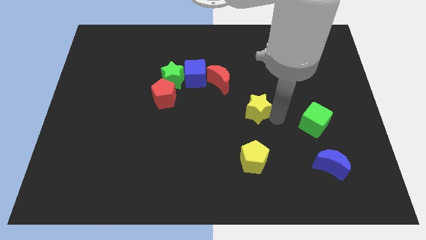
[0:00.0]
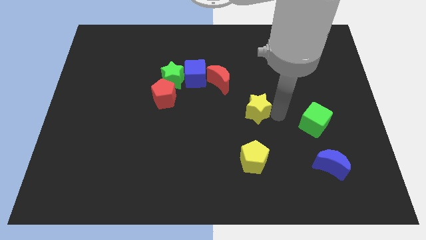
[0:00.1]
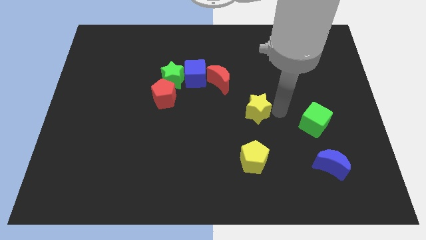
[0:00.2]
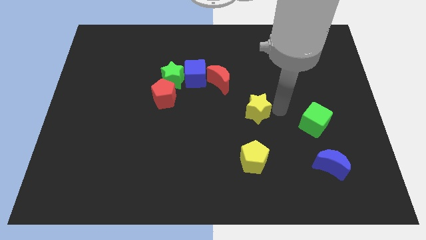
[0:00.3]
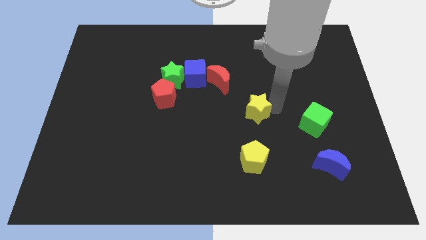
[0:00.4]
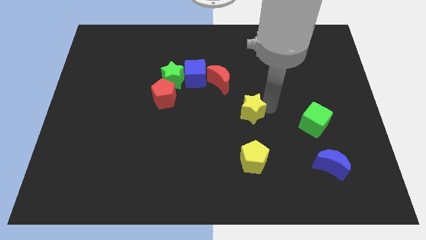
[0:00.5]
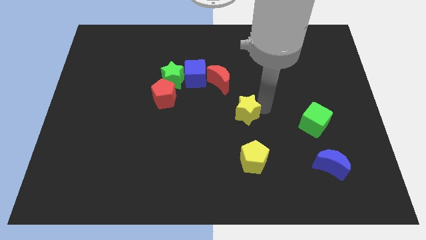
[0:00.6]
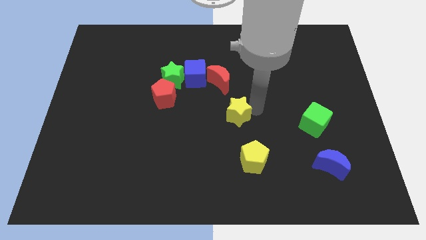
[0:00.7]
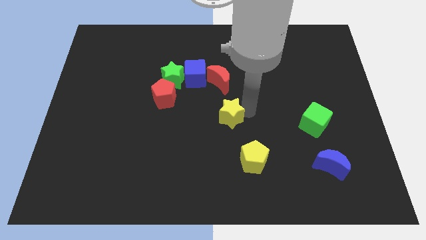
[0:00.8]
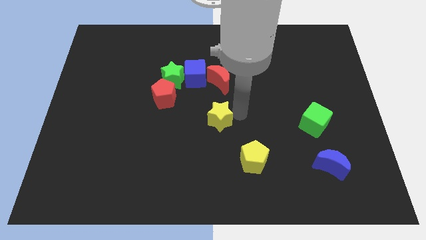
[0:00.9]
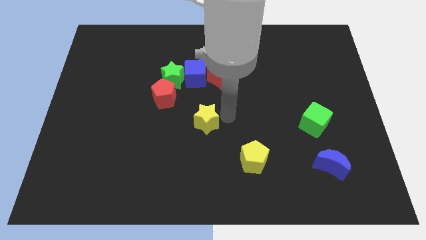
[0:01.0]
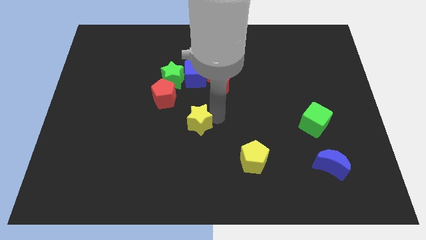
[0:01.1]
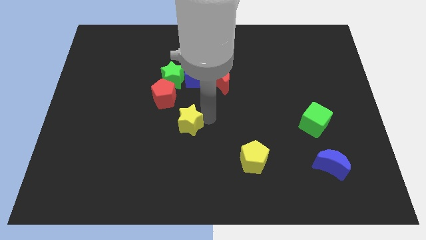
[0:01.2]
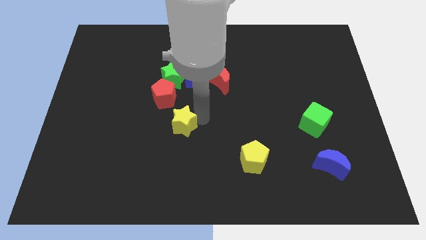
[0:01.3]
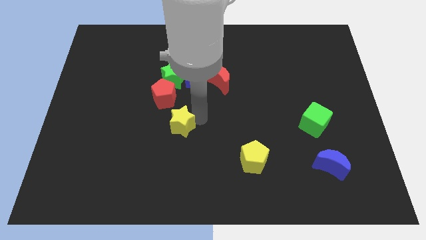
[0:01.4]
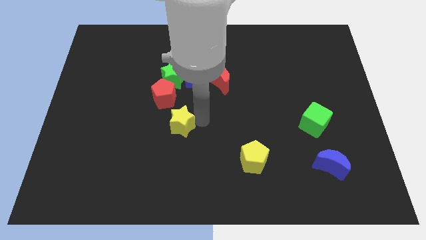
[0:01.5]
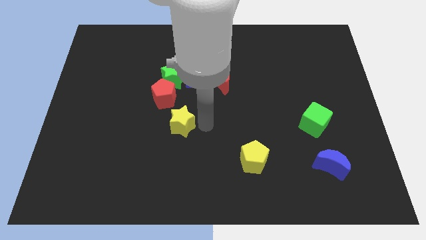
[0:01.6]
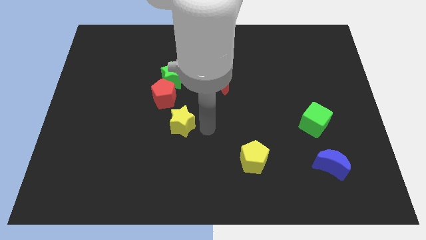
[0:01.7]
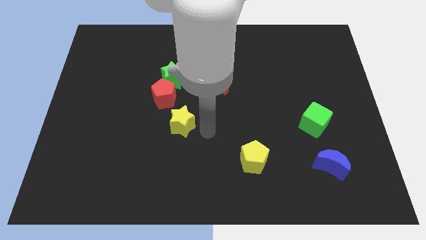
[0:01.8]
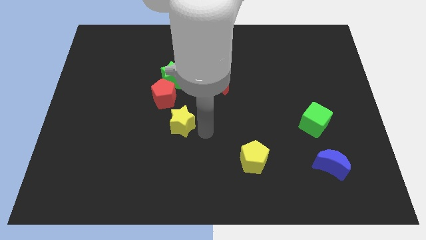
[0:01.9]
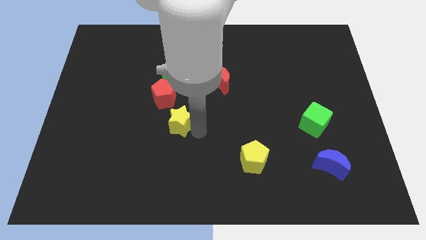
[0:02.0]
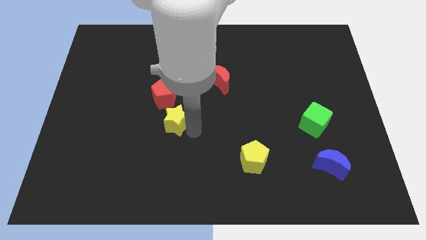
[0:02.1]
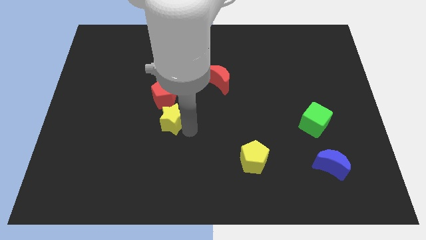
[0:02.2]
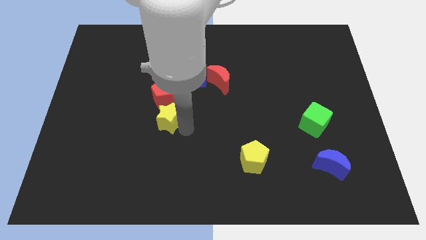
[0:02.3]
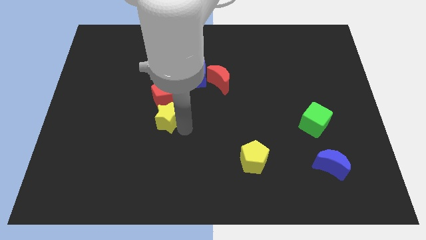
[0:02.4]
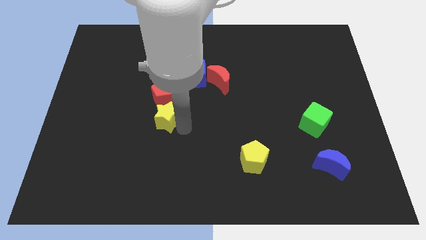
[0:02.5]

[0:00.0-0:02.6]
move the yellow star down to the red pentagon

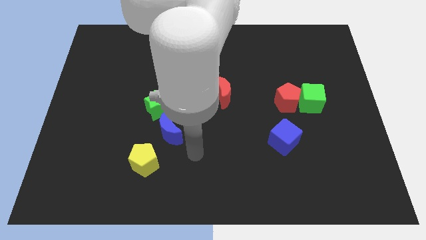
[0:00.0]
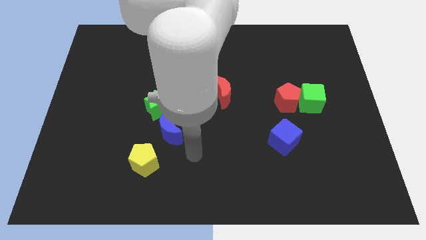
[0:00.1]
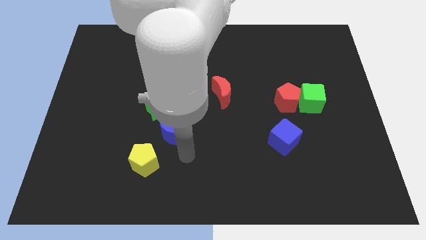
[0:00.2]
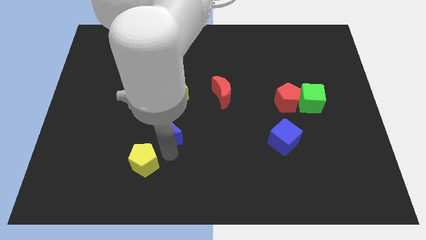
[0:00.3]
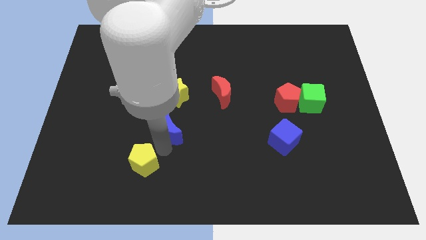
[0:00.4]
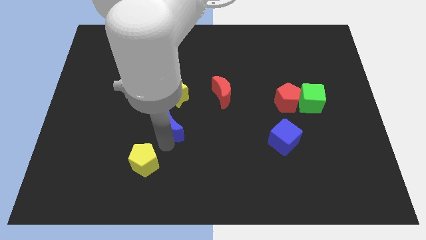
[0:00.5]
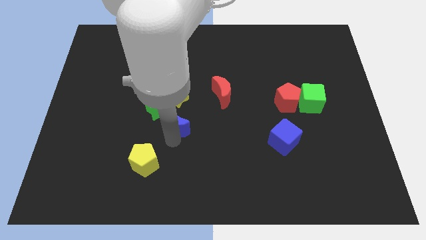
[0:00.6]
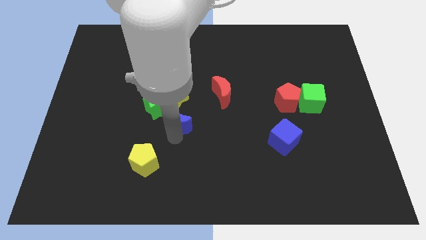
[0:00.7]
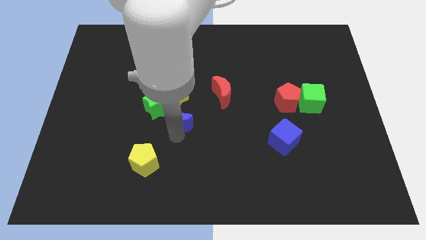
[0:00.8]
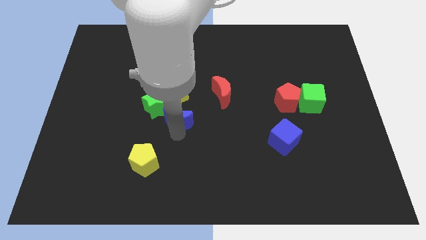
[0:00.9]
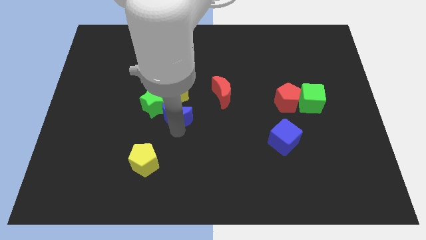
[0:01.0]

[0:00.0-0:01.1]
place the blue cube at the bottom of yellow star

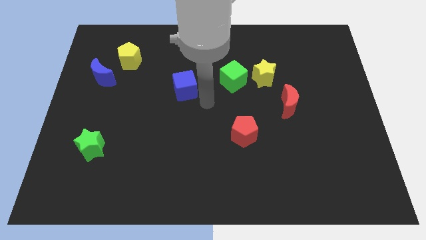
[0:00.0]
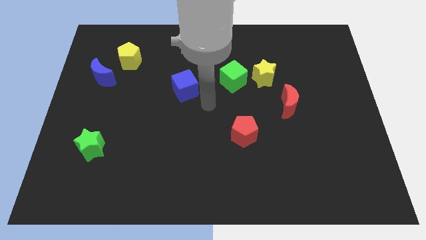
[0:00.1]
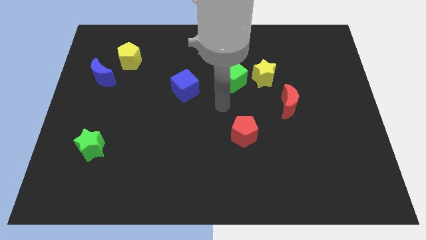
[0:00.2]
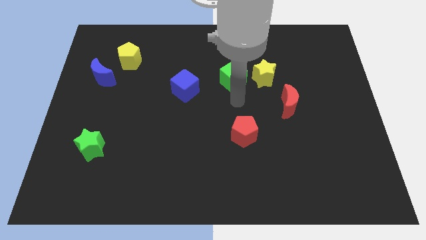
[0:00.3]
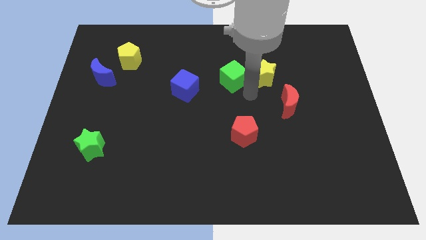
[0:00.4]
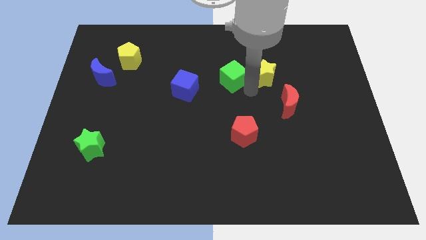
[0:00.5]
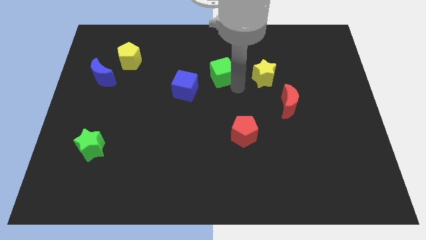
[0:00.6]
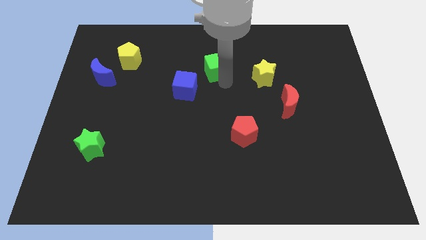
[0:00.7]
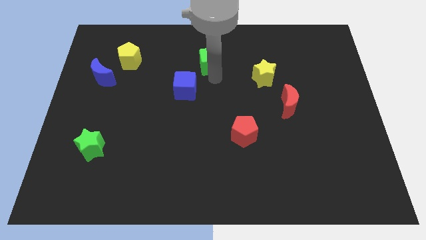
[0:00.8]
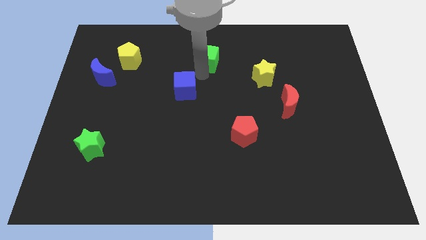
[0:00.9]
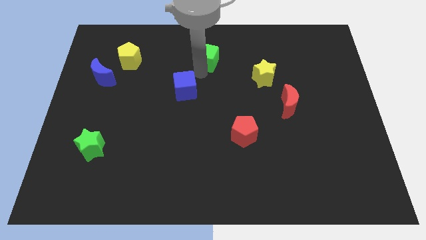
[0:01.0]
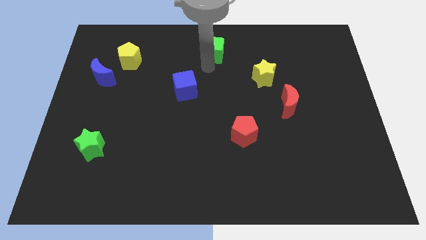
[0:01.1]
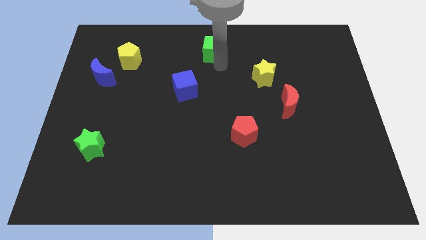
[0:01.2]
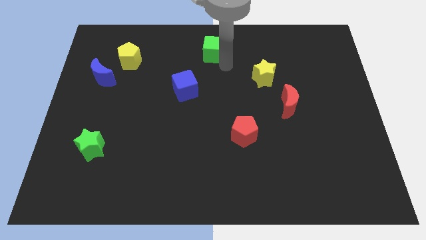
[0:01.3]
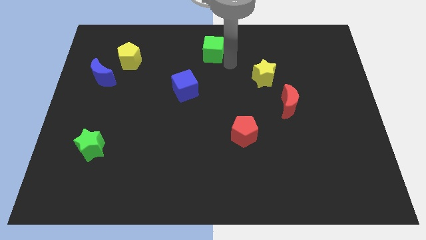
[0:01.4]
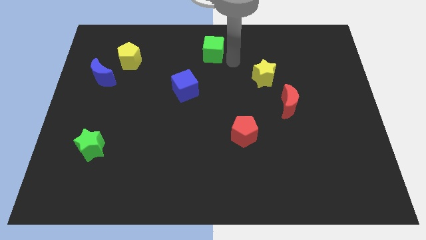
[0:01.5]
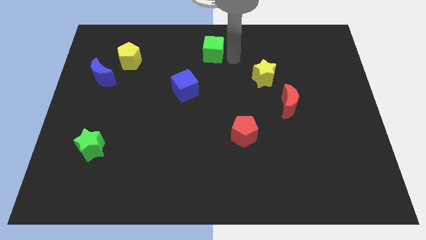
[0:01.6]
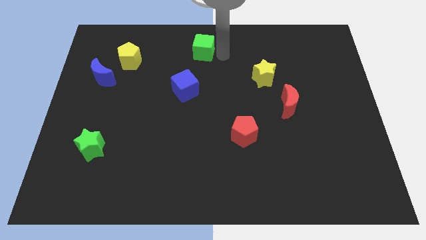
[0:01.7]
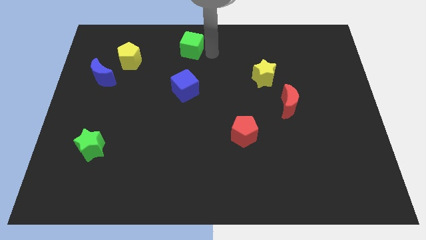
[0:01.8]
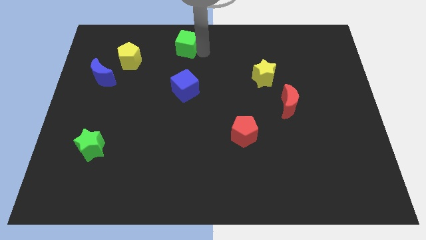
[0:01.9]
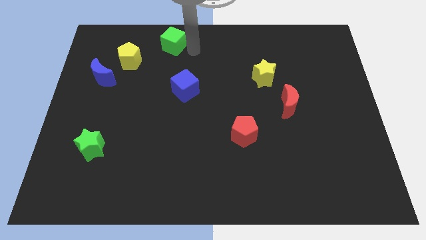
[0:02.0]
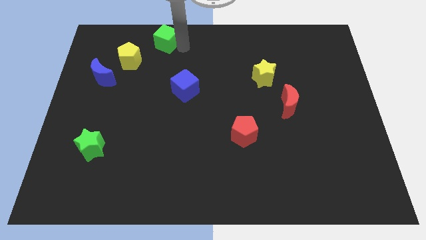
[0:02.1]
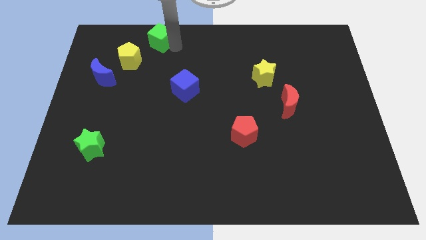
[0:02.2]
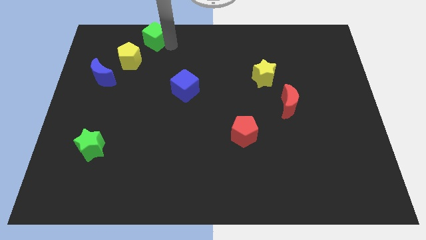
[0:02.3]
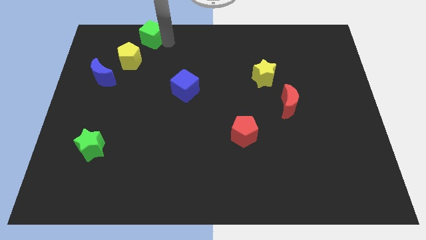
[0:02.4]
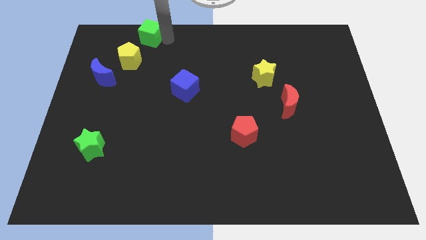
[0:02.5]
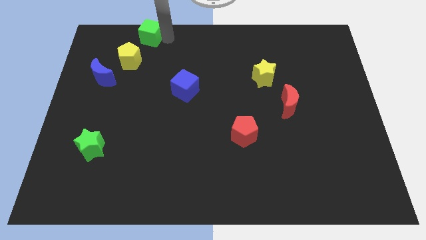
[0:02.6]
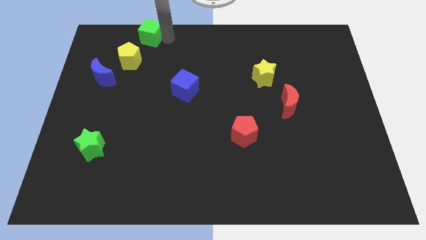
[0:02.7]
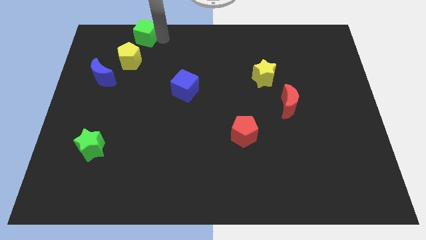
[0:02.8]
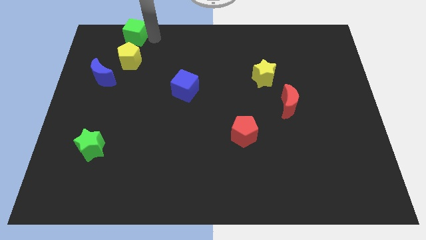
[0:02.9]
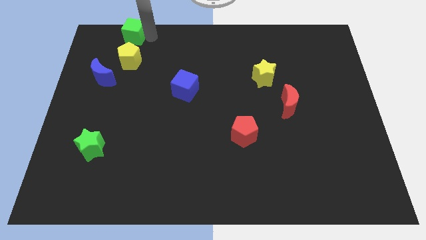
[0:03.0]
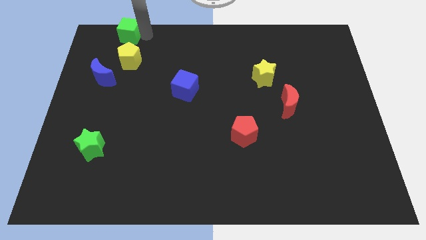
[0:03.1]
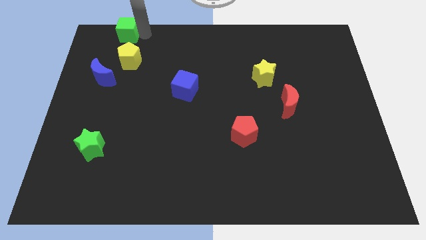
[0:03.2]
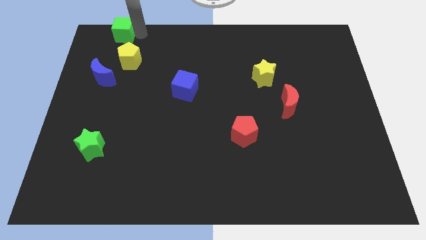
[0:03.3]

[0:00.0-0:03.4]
place the green cube above the yellow pentagon

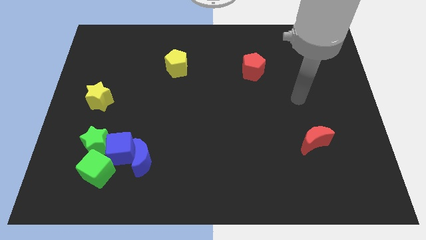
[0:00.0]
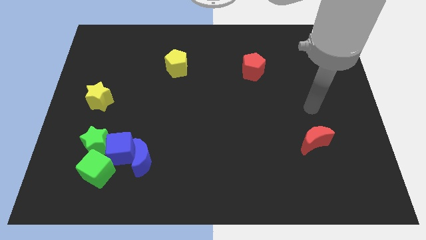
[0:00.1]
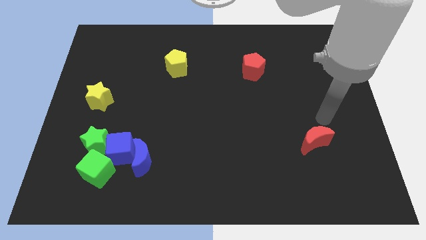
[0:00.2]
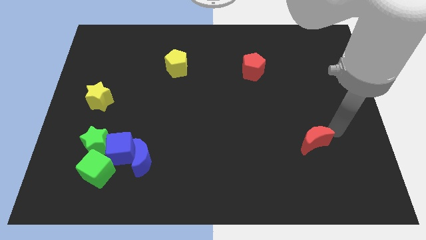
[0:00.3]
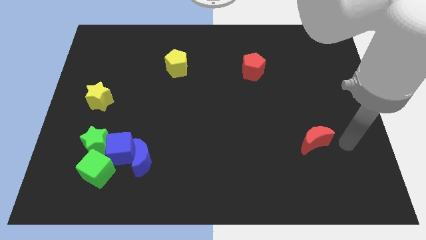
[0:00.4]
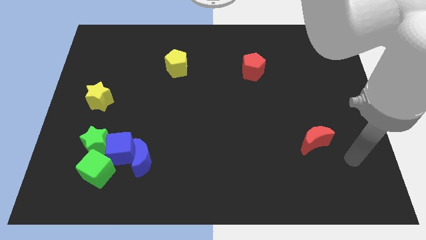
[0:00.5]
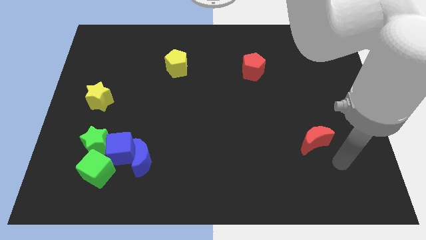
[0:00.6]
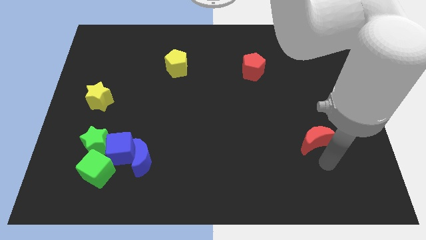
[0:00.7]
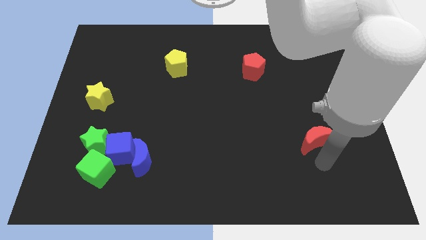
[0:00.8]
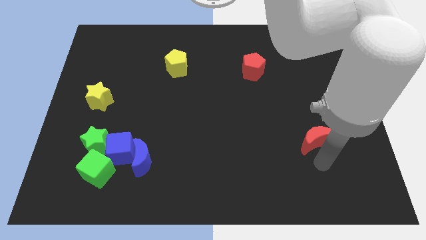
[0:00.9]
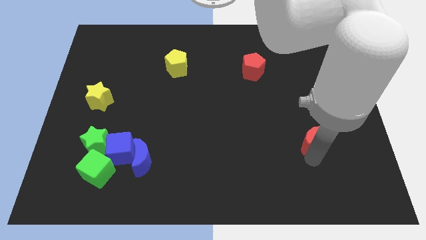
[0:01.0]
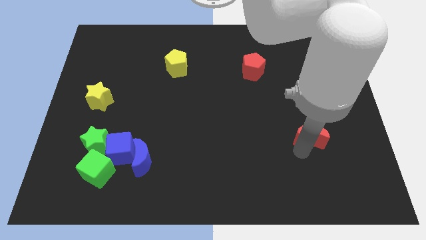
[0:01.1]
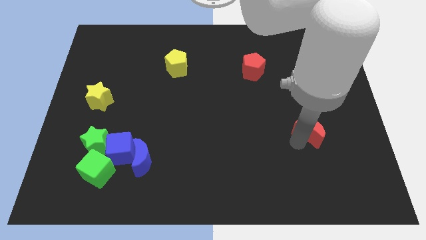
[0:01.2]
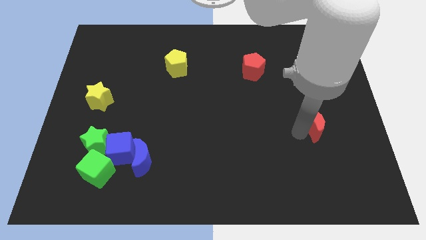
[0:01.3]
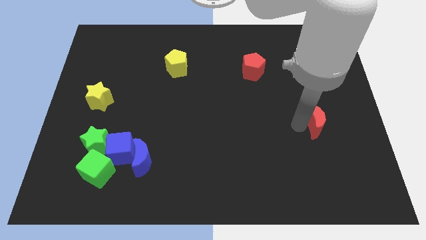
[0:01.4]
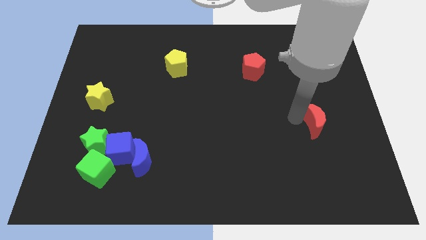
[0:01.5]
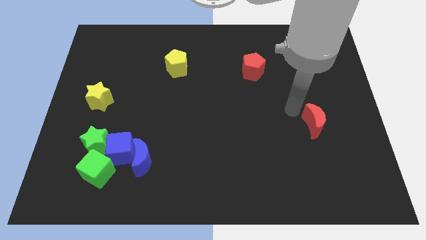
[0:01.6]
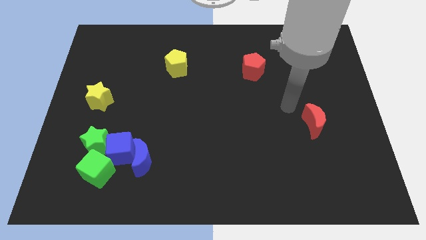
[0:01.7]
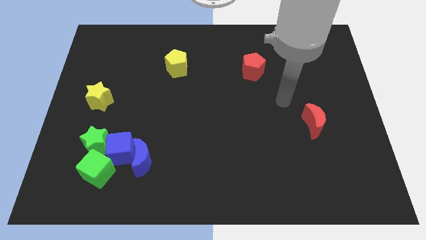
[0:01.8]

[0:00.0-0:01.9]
move the red moon slightly to the top center
